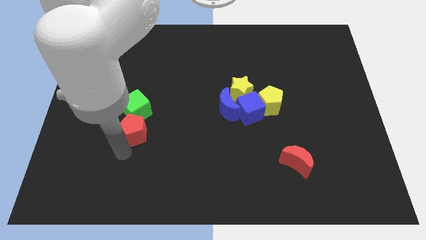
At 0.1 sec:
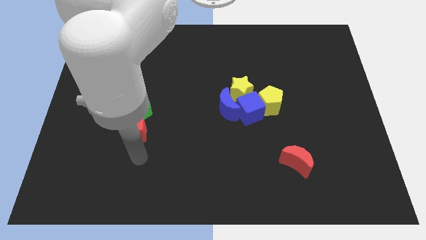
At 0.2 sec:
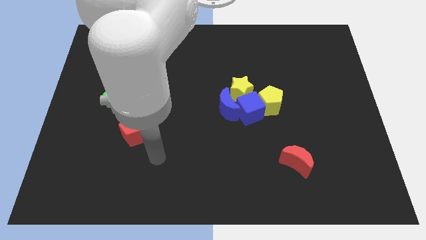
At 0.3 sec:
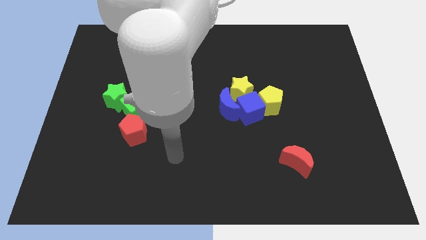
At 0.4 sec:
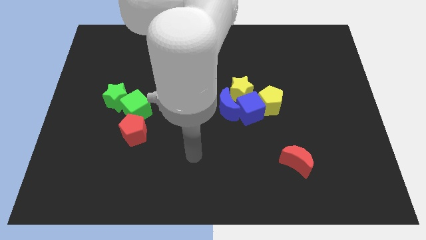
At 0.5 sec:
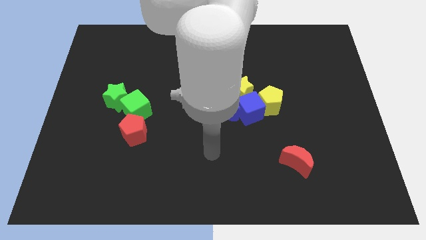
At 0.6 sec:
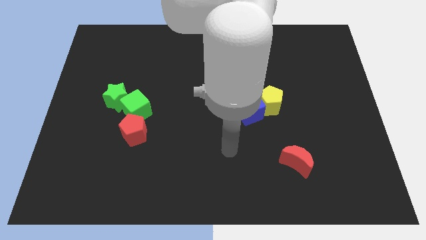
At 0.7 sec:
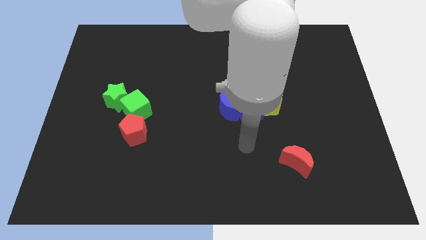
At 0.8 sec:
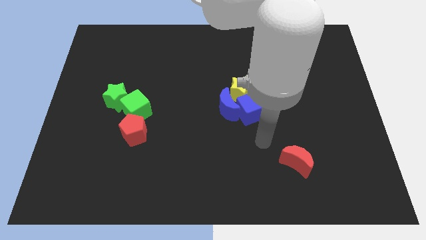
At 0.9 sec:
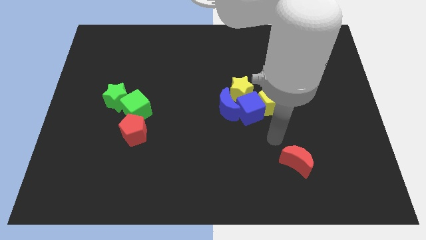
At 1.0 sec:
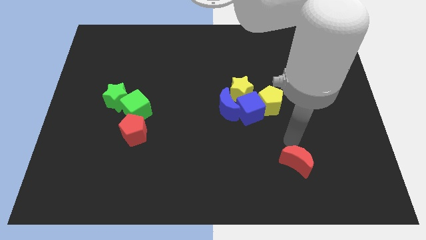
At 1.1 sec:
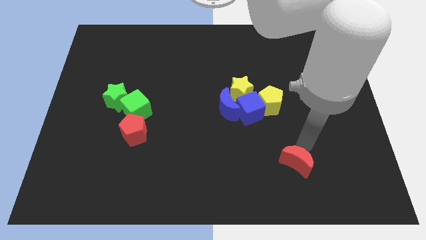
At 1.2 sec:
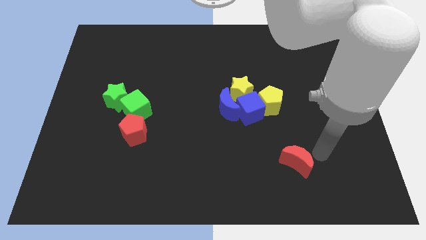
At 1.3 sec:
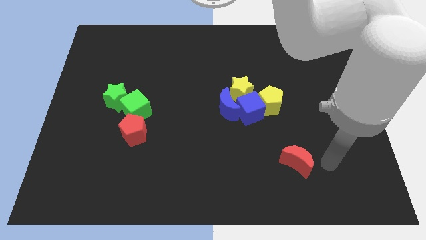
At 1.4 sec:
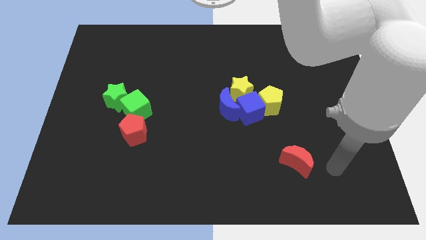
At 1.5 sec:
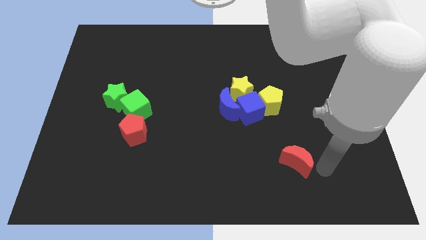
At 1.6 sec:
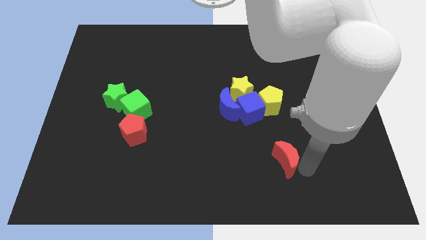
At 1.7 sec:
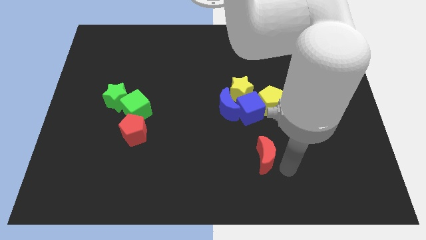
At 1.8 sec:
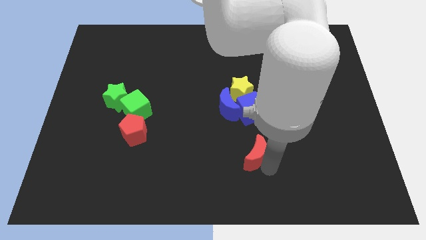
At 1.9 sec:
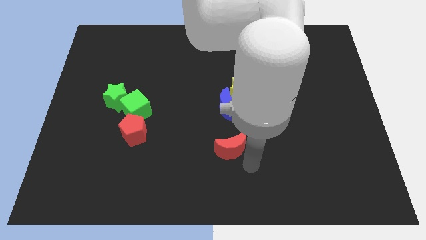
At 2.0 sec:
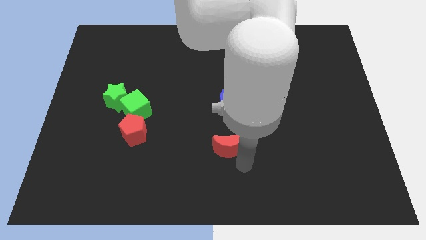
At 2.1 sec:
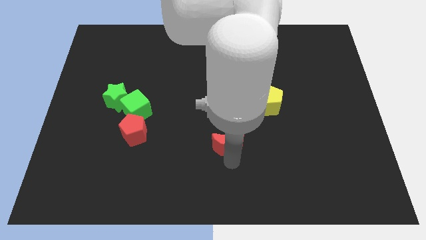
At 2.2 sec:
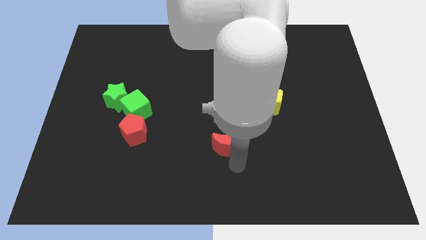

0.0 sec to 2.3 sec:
place the red moon to the bottom of blue blocks

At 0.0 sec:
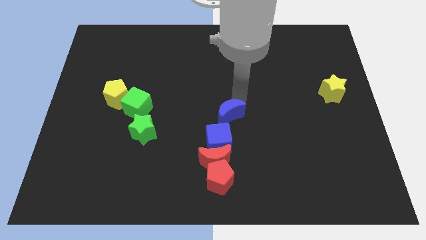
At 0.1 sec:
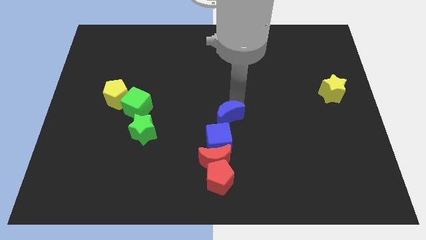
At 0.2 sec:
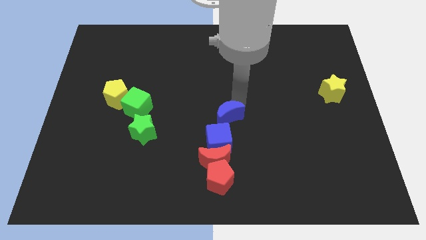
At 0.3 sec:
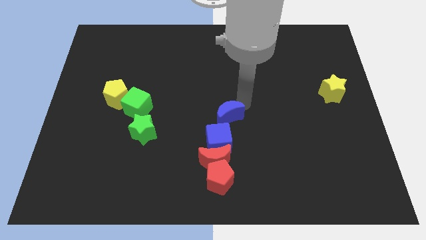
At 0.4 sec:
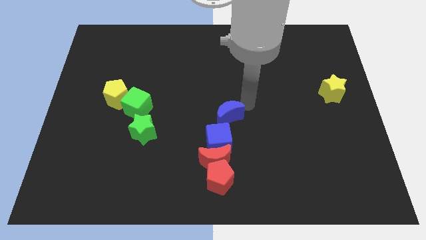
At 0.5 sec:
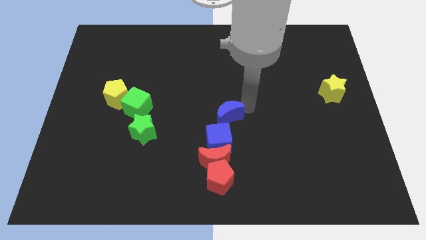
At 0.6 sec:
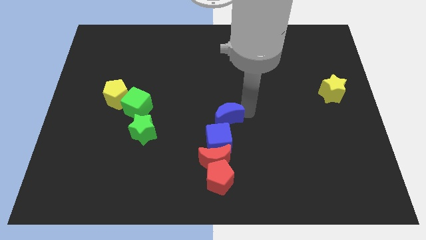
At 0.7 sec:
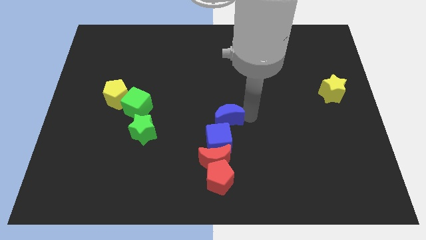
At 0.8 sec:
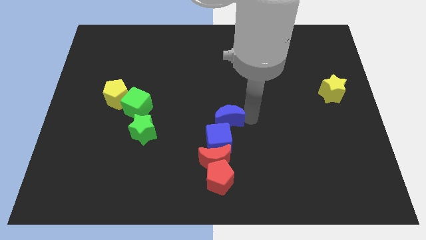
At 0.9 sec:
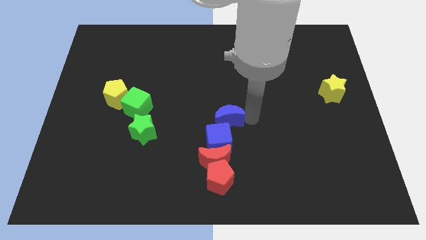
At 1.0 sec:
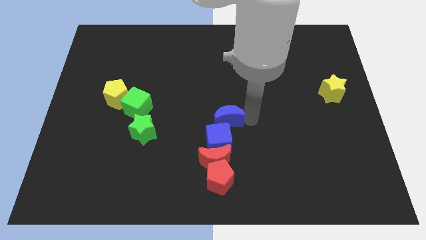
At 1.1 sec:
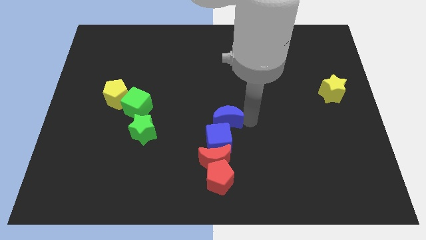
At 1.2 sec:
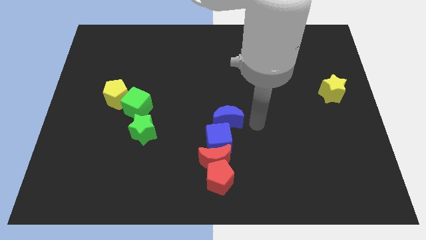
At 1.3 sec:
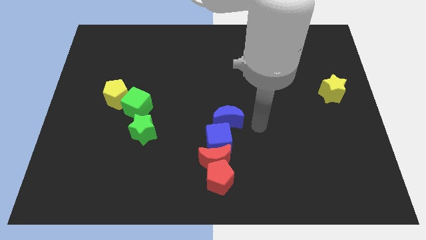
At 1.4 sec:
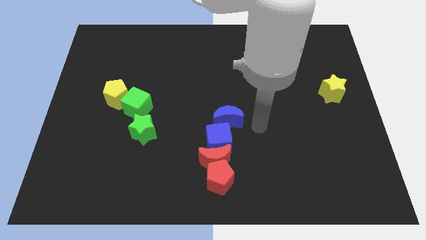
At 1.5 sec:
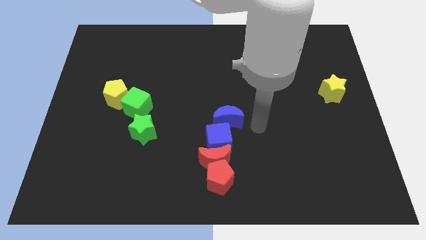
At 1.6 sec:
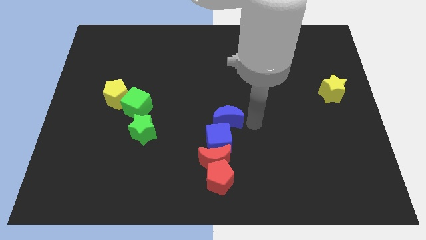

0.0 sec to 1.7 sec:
move the blue crescent close to the blue cube

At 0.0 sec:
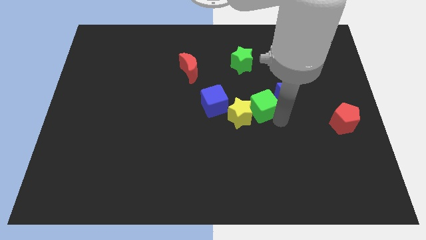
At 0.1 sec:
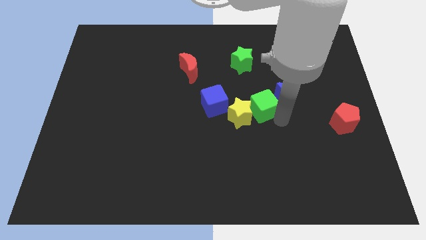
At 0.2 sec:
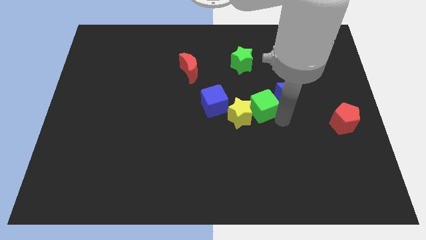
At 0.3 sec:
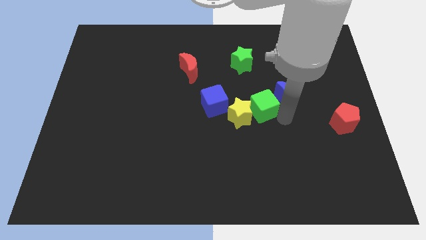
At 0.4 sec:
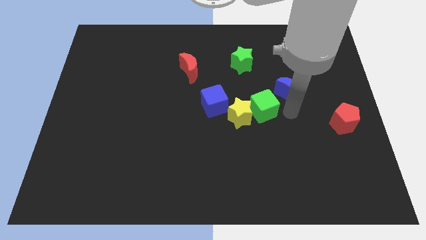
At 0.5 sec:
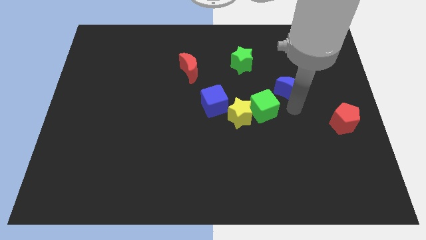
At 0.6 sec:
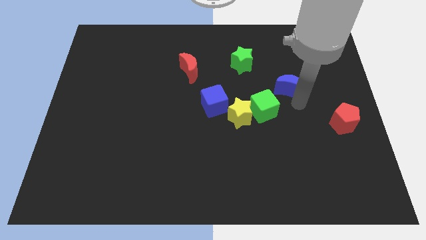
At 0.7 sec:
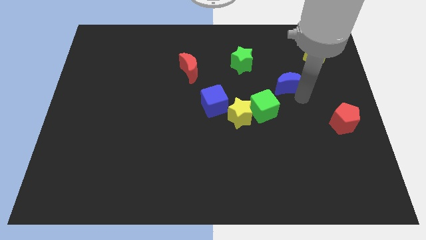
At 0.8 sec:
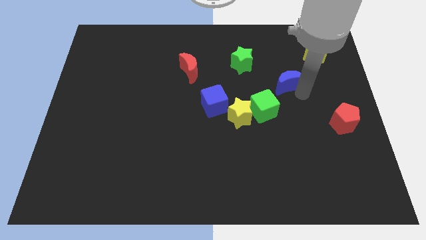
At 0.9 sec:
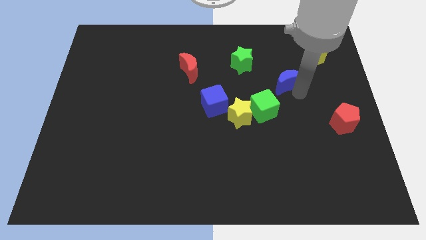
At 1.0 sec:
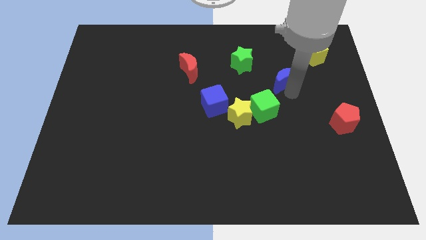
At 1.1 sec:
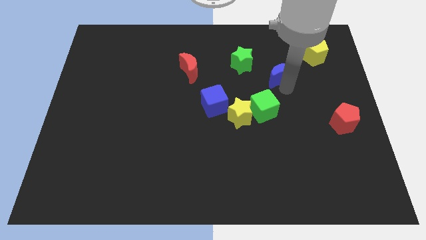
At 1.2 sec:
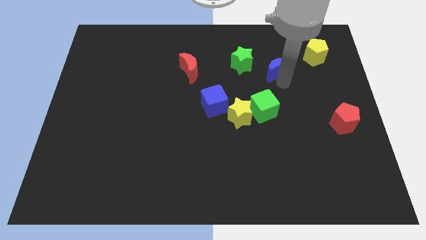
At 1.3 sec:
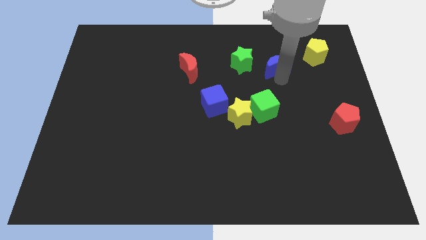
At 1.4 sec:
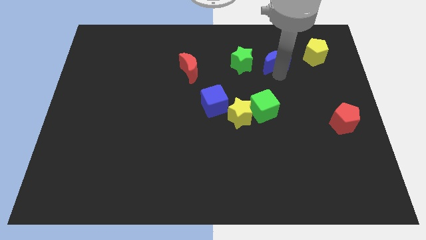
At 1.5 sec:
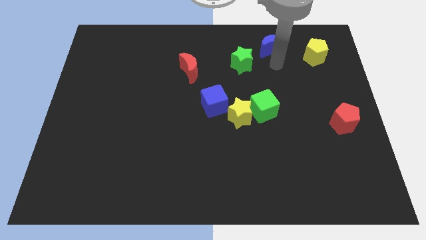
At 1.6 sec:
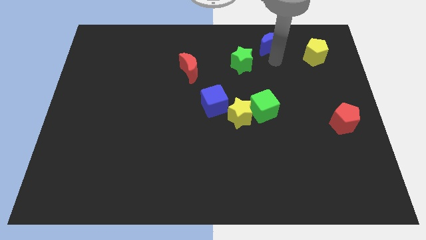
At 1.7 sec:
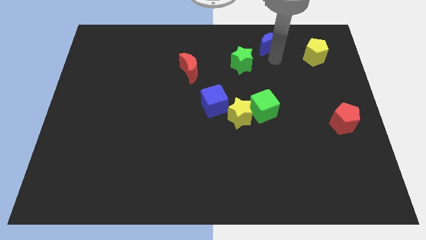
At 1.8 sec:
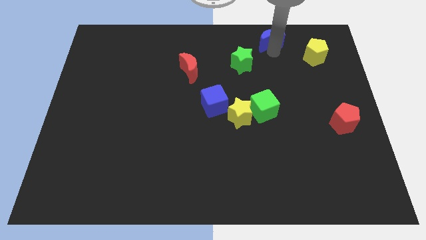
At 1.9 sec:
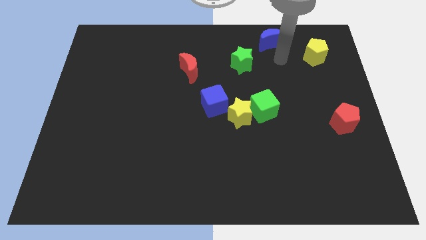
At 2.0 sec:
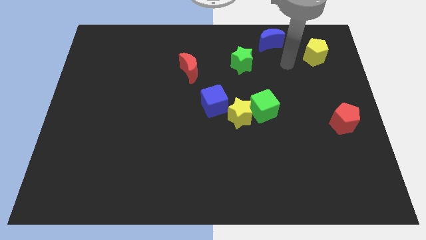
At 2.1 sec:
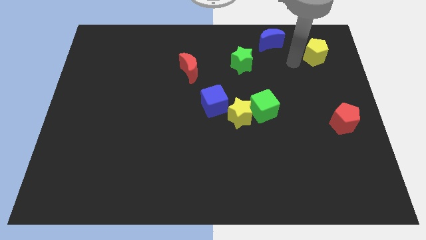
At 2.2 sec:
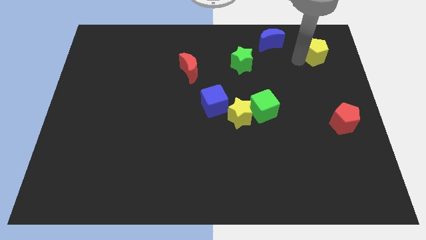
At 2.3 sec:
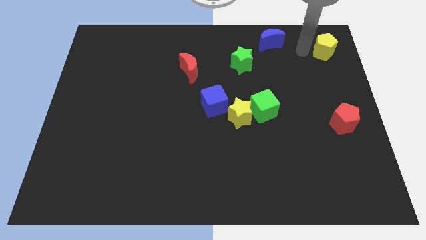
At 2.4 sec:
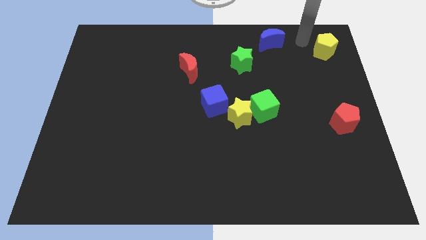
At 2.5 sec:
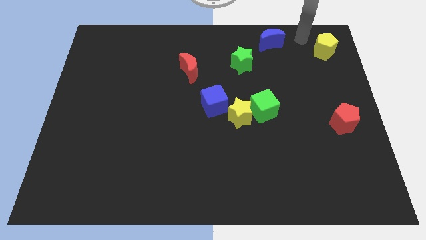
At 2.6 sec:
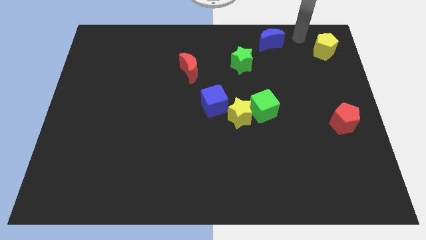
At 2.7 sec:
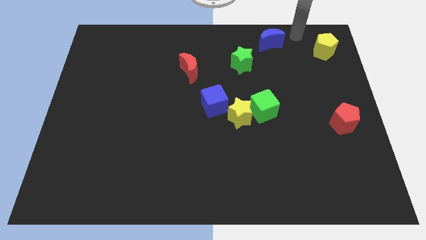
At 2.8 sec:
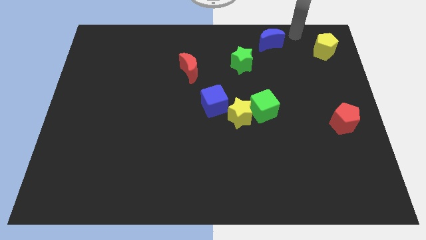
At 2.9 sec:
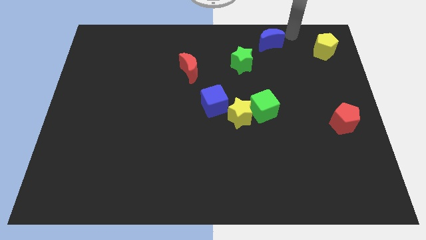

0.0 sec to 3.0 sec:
slightly push the yellow pentagon to the top right of the board

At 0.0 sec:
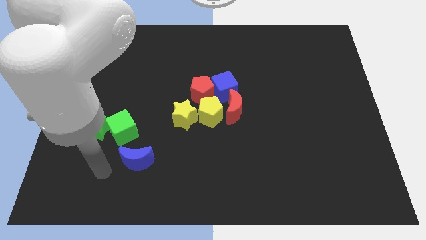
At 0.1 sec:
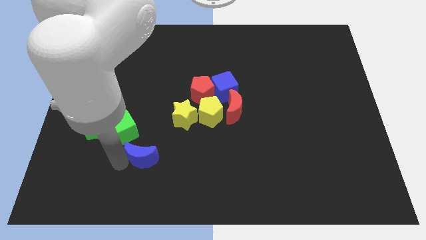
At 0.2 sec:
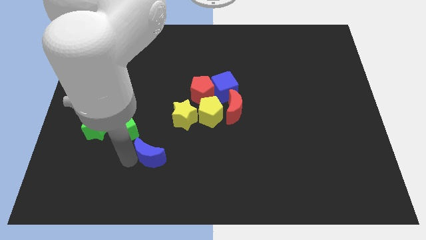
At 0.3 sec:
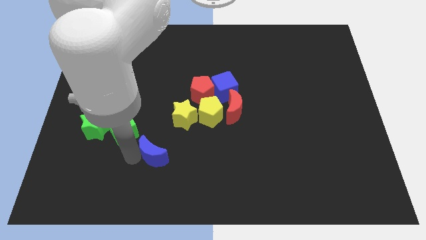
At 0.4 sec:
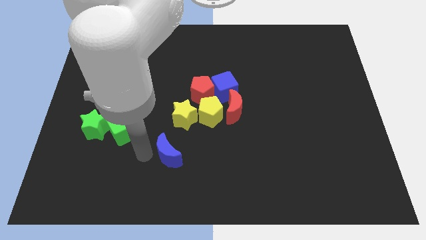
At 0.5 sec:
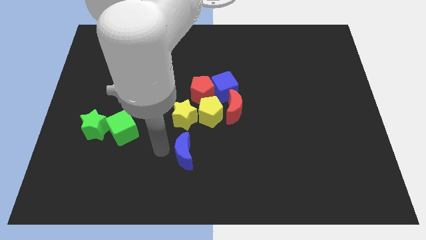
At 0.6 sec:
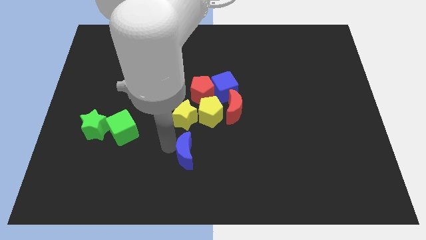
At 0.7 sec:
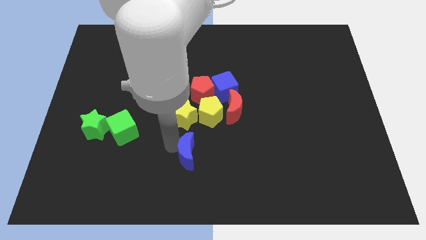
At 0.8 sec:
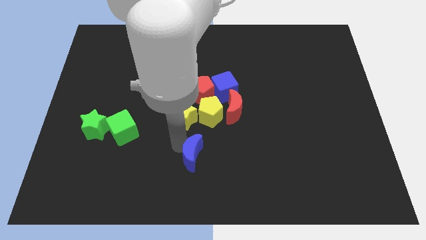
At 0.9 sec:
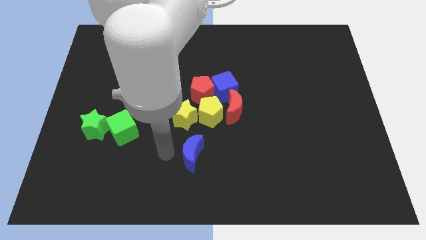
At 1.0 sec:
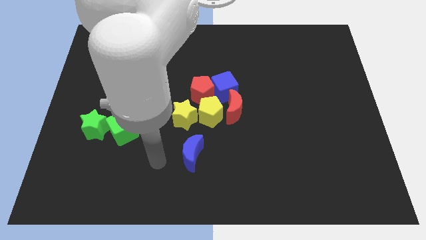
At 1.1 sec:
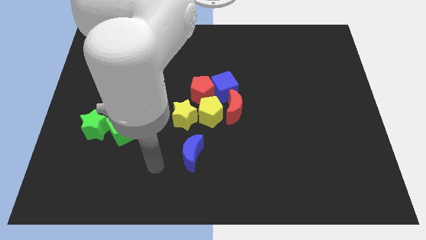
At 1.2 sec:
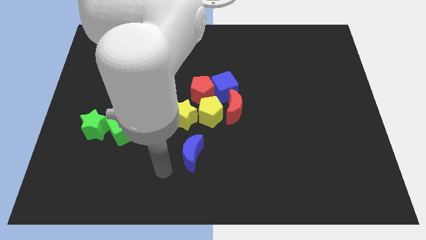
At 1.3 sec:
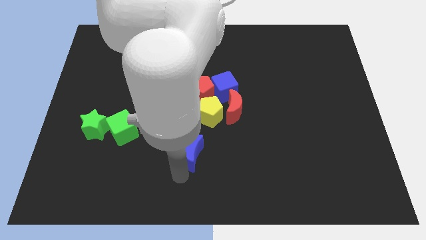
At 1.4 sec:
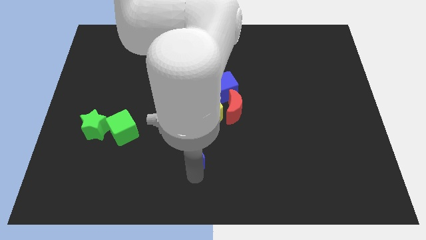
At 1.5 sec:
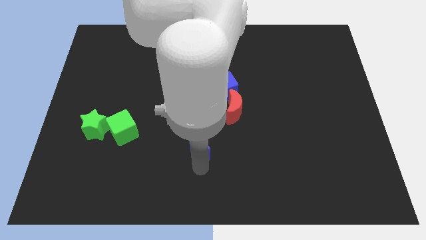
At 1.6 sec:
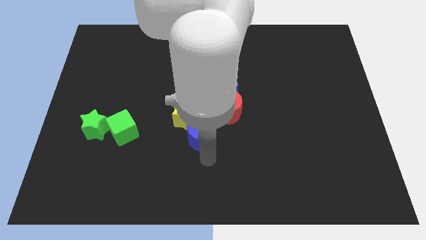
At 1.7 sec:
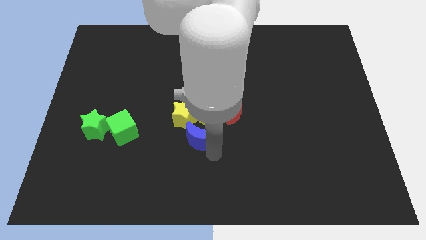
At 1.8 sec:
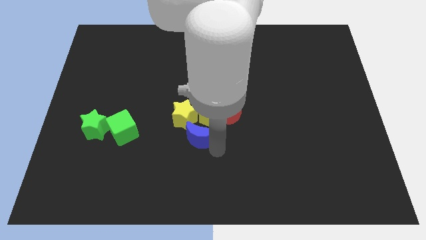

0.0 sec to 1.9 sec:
push the blue crescent towards the group of blocks
